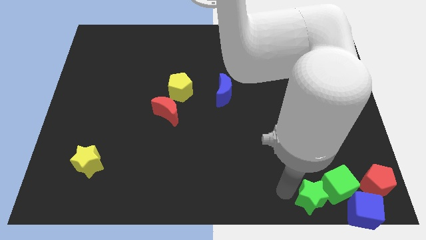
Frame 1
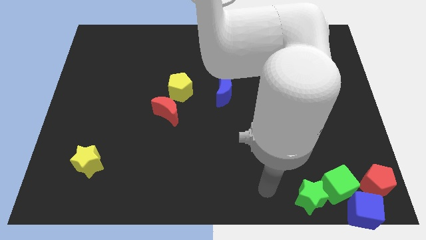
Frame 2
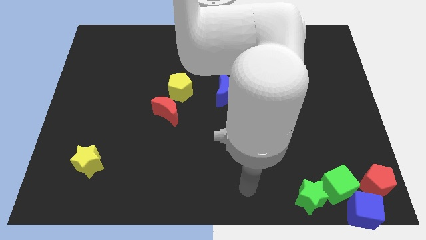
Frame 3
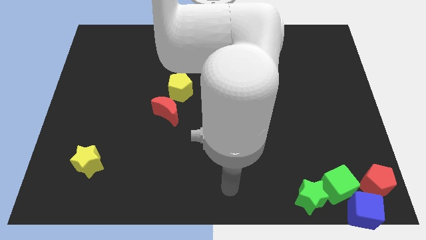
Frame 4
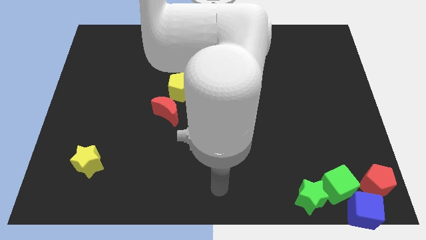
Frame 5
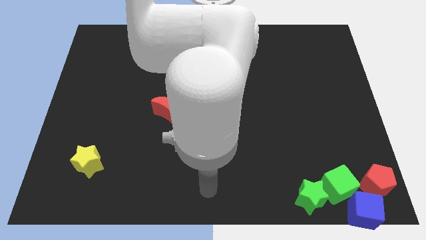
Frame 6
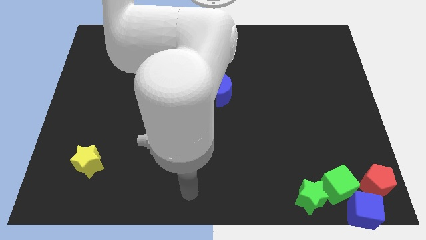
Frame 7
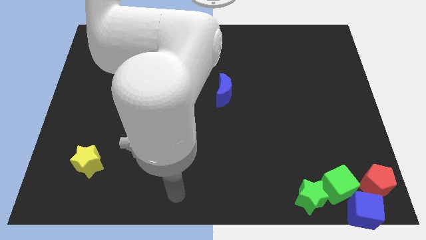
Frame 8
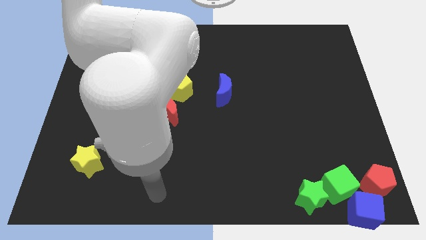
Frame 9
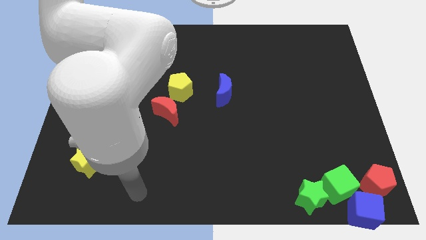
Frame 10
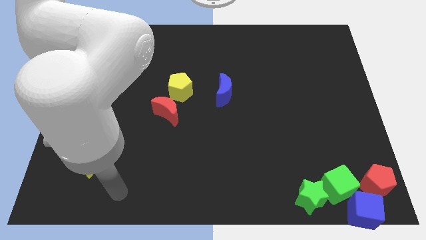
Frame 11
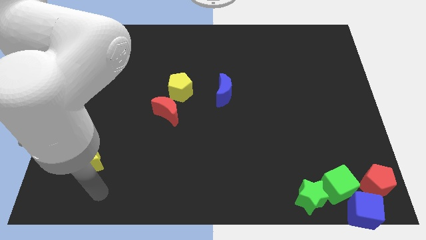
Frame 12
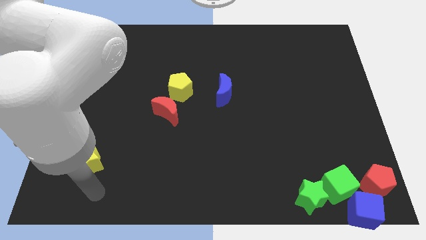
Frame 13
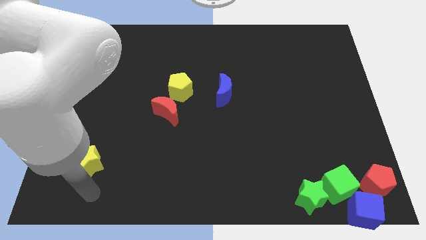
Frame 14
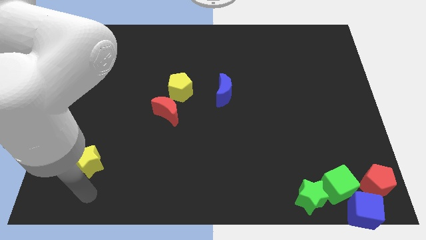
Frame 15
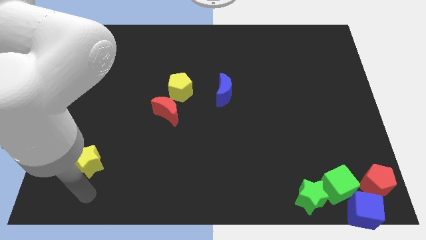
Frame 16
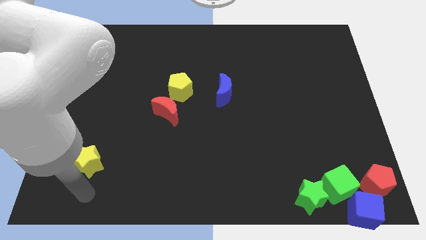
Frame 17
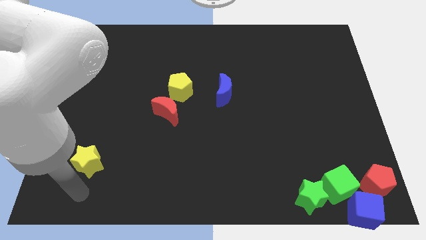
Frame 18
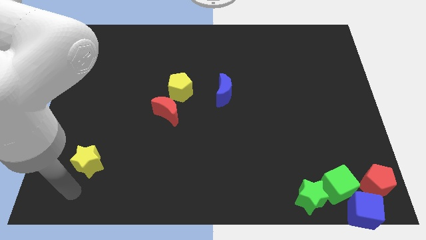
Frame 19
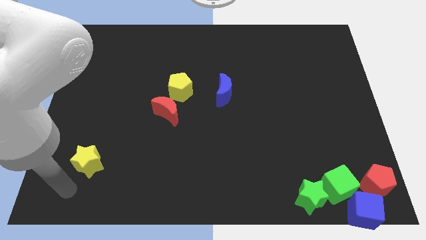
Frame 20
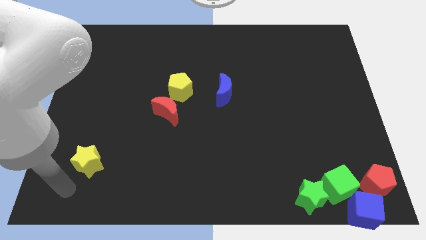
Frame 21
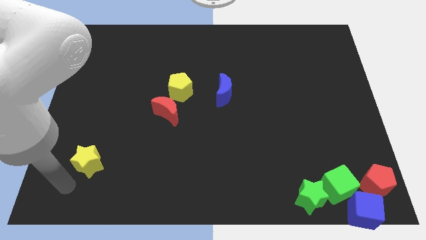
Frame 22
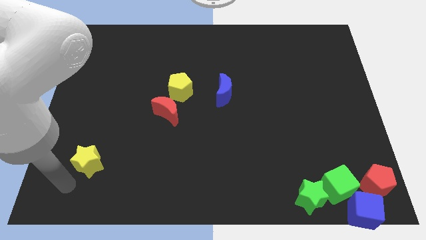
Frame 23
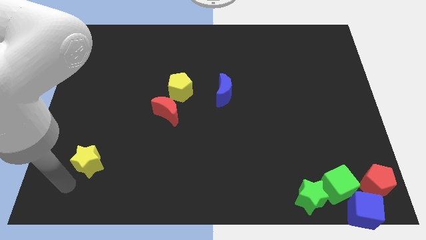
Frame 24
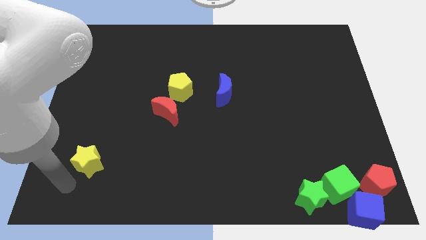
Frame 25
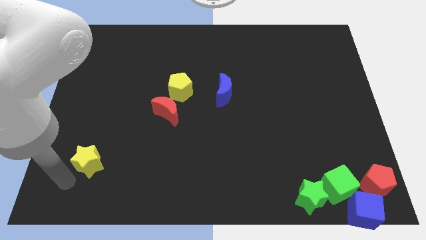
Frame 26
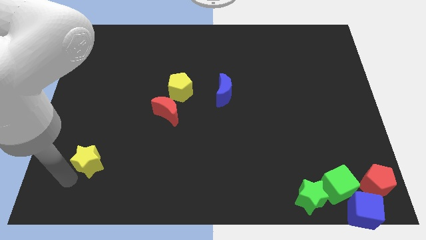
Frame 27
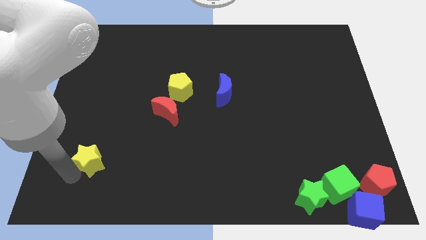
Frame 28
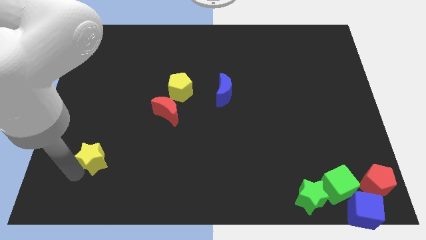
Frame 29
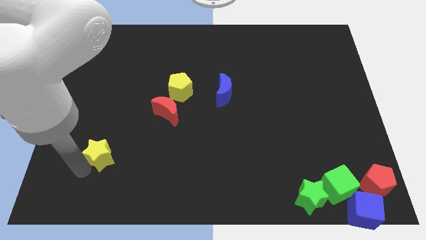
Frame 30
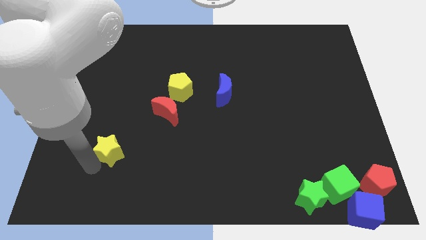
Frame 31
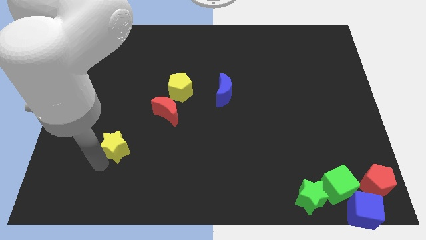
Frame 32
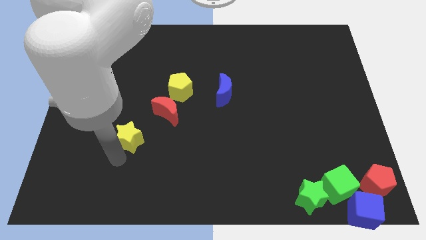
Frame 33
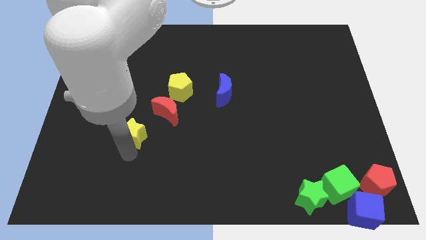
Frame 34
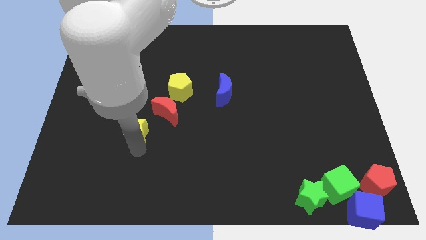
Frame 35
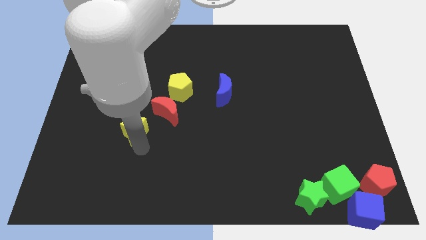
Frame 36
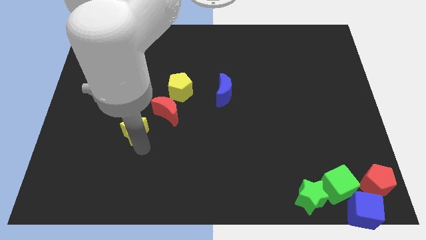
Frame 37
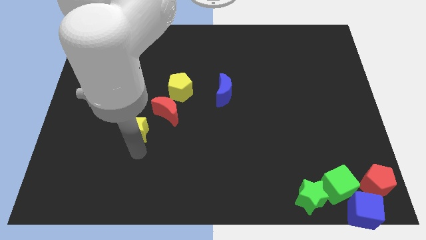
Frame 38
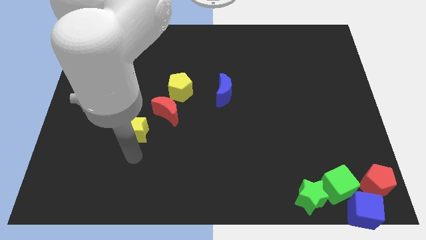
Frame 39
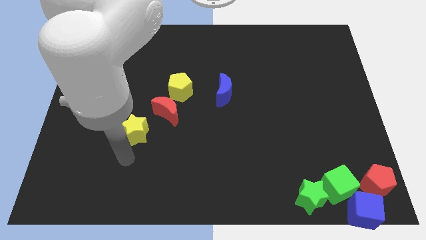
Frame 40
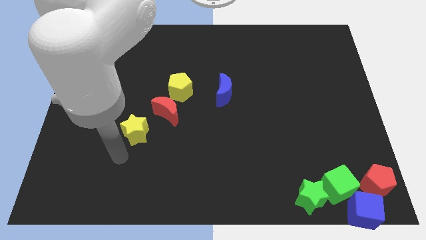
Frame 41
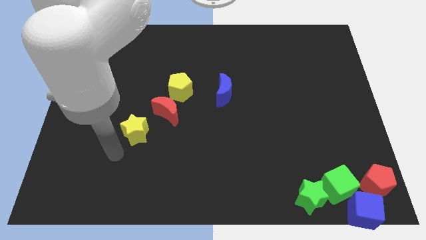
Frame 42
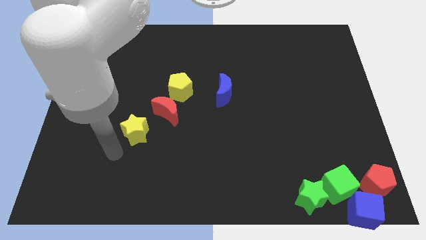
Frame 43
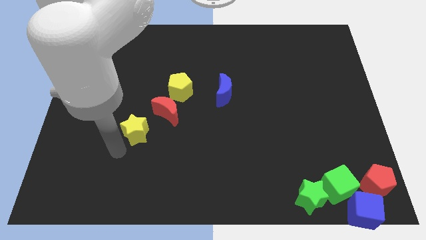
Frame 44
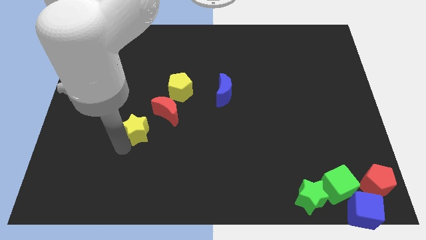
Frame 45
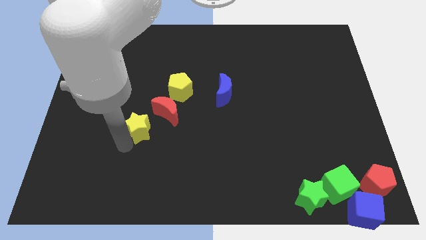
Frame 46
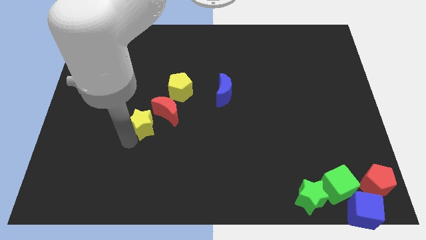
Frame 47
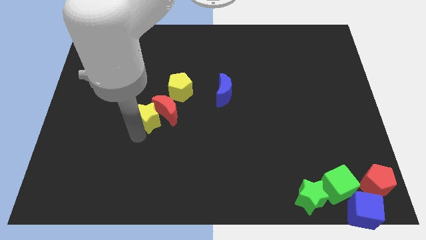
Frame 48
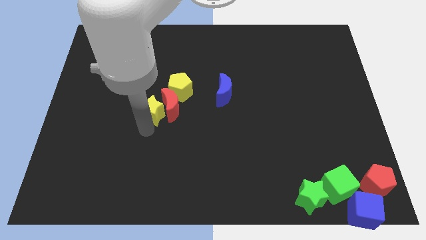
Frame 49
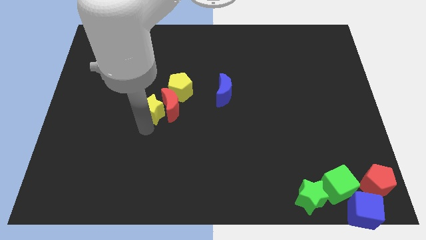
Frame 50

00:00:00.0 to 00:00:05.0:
push the yellow star into the left side of the red moon

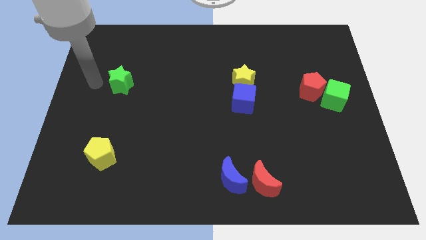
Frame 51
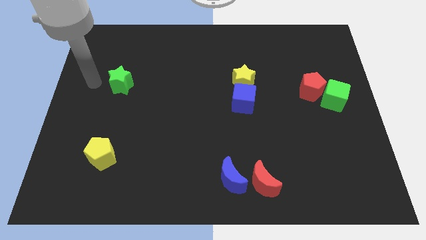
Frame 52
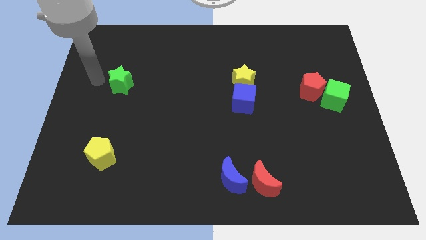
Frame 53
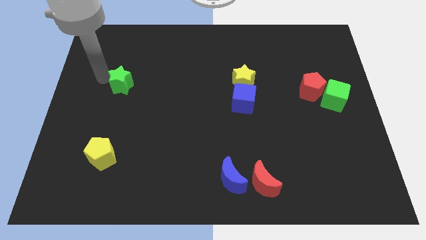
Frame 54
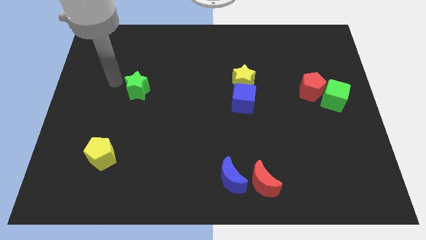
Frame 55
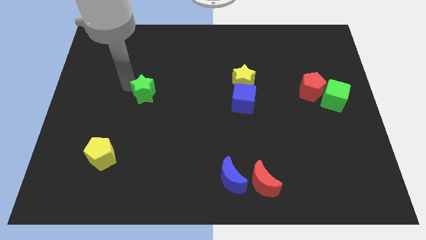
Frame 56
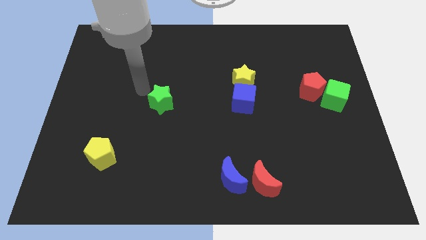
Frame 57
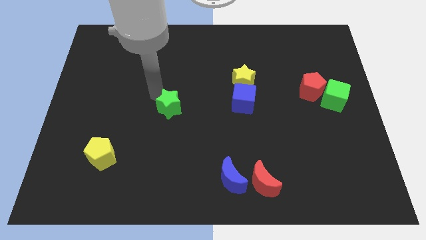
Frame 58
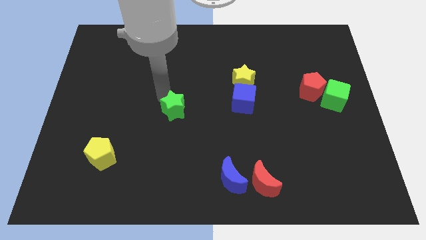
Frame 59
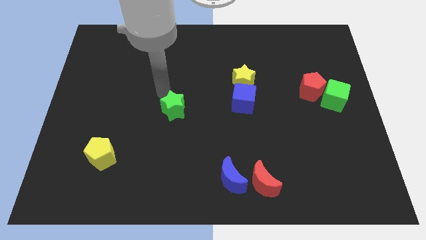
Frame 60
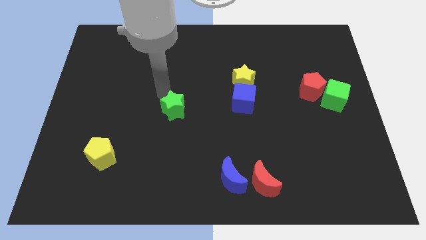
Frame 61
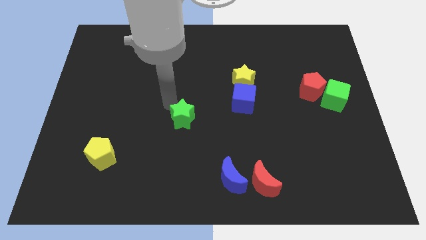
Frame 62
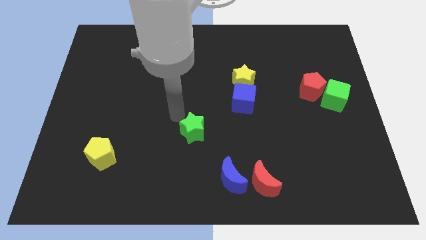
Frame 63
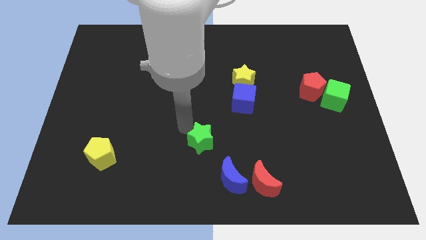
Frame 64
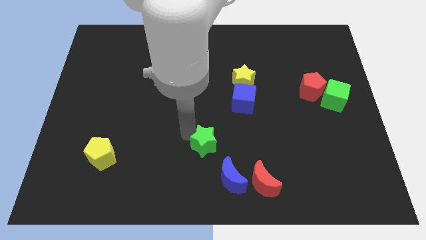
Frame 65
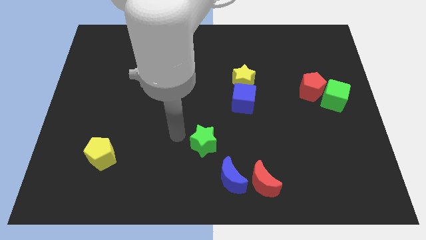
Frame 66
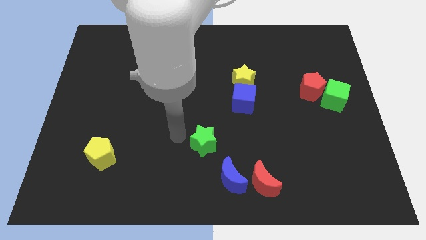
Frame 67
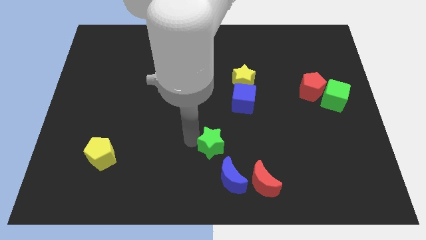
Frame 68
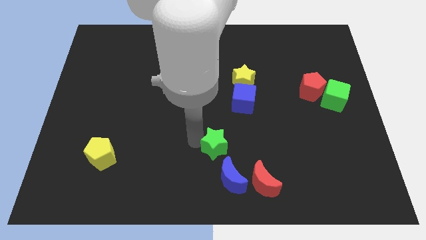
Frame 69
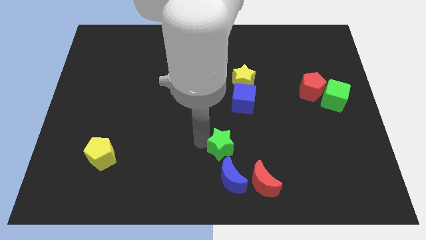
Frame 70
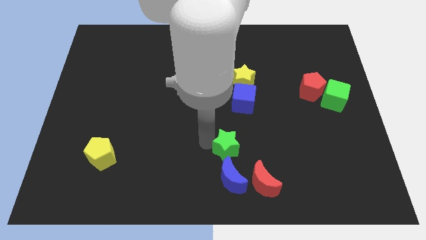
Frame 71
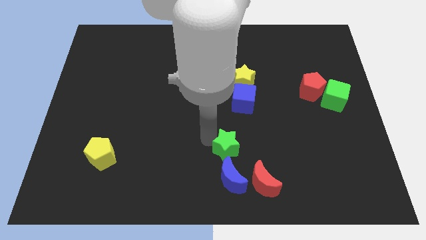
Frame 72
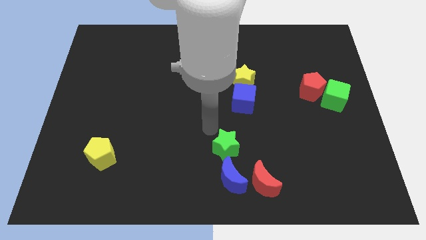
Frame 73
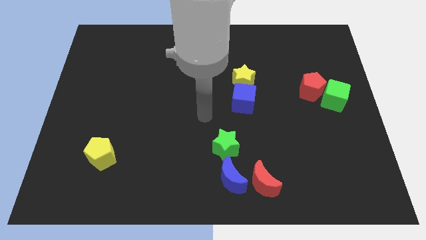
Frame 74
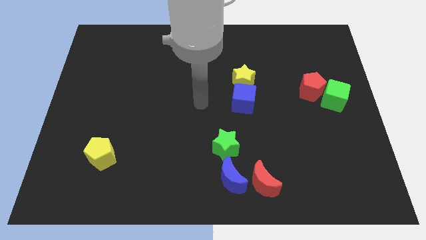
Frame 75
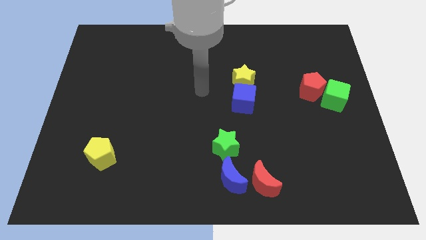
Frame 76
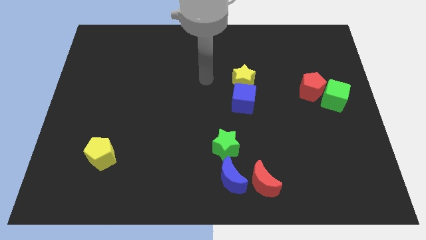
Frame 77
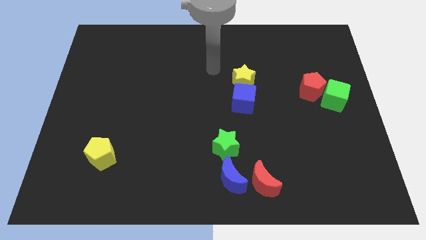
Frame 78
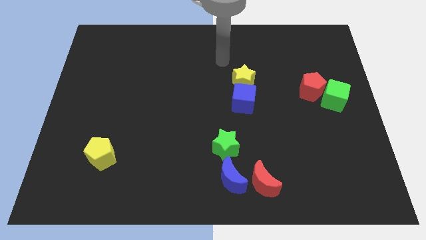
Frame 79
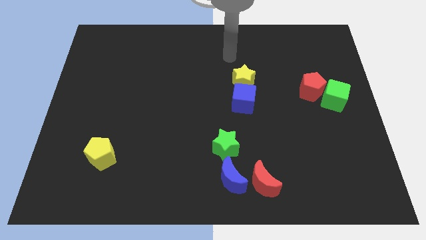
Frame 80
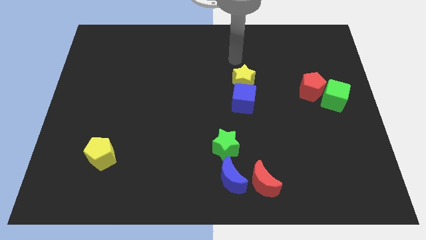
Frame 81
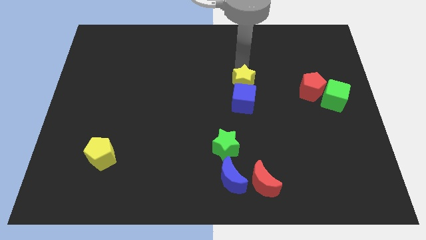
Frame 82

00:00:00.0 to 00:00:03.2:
push the green star towards the blue crescent

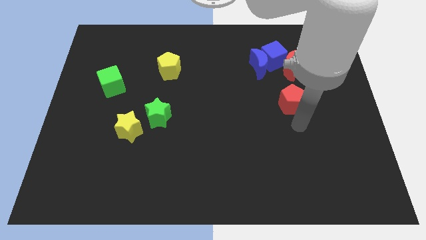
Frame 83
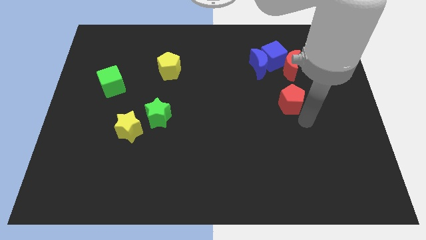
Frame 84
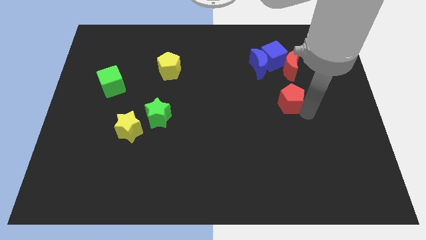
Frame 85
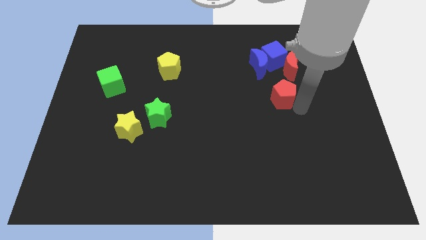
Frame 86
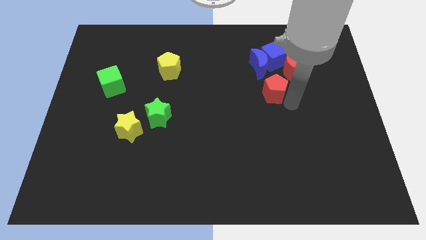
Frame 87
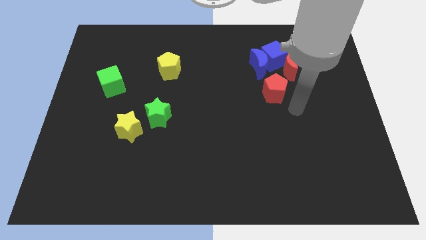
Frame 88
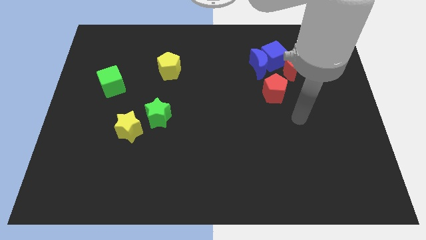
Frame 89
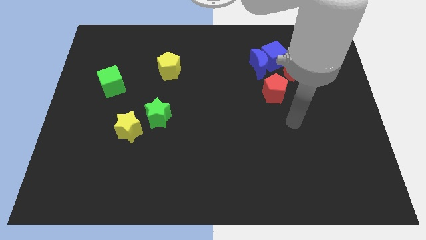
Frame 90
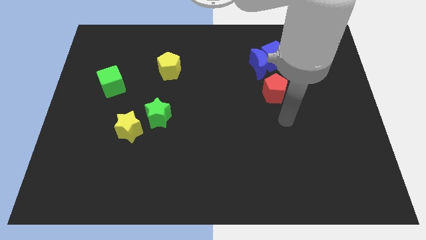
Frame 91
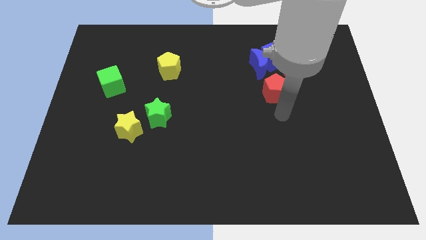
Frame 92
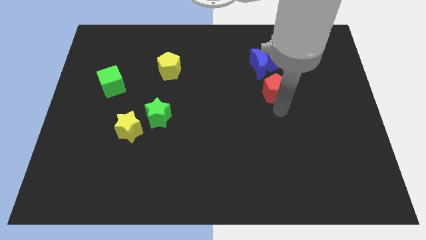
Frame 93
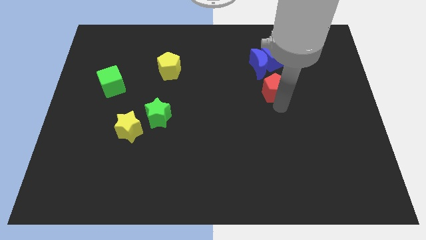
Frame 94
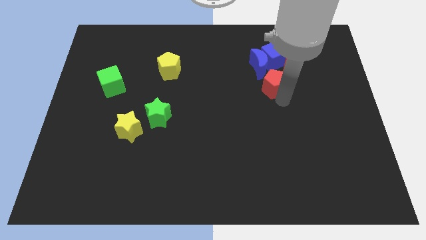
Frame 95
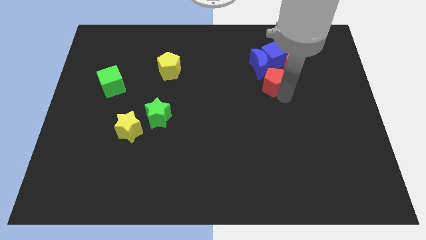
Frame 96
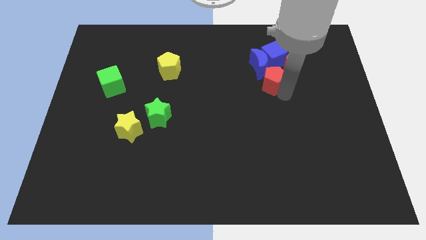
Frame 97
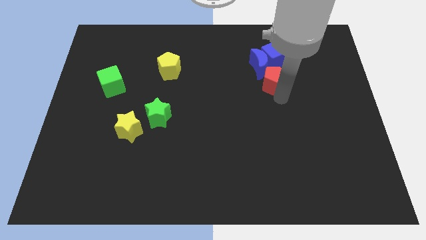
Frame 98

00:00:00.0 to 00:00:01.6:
push red pentagon into the group of blocks
